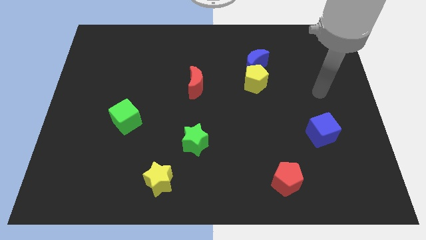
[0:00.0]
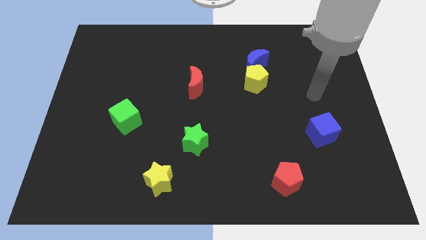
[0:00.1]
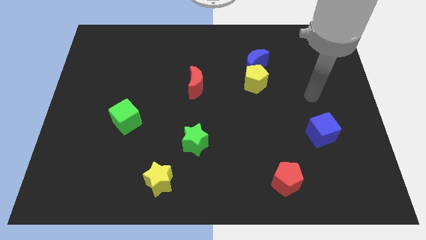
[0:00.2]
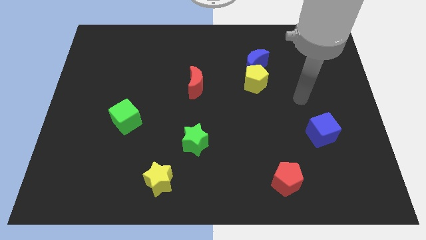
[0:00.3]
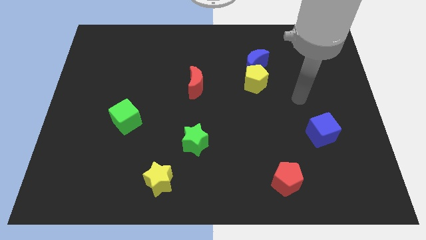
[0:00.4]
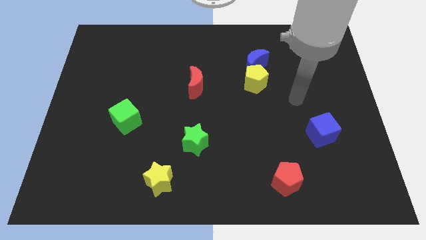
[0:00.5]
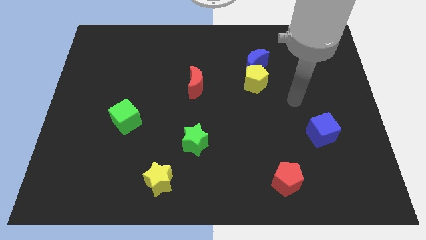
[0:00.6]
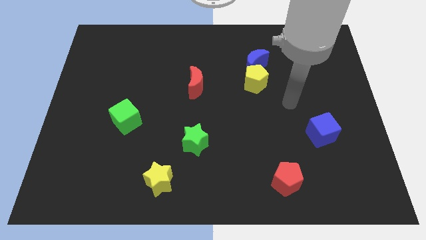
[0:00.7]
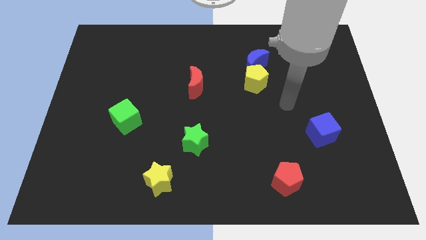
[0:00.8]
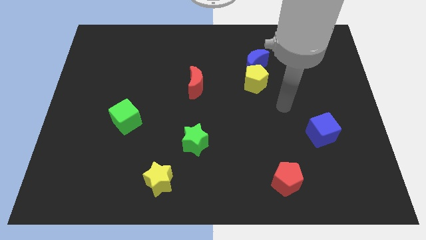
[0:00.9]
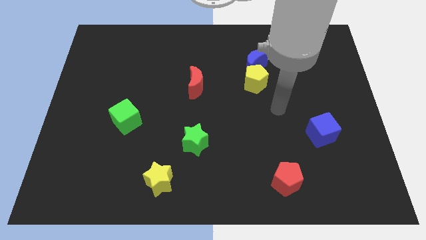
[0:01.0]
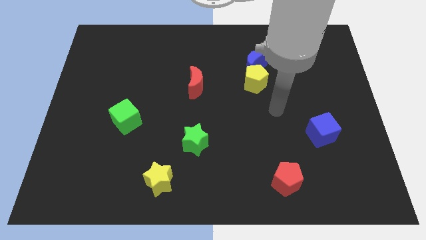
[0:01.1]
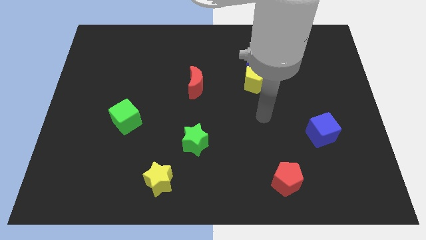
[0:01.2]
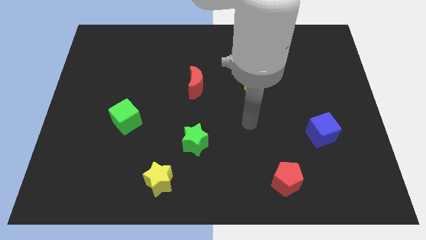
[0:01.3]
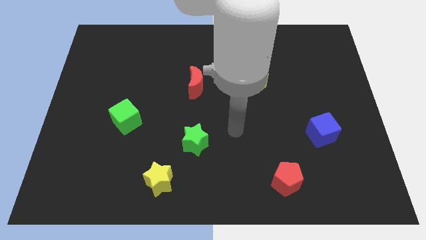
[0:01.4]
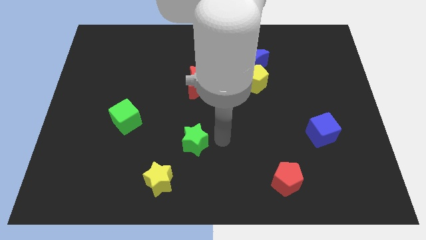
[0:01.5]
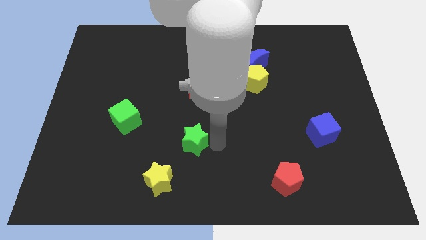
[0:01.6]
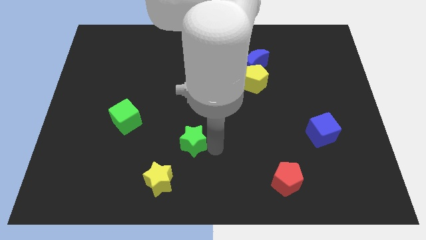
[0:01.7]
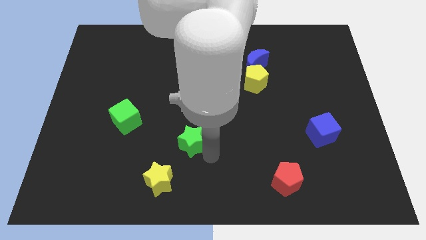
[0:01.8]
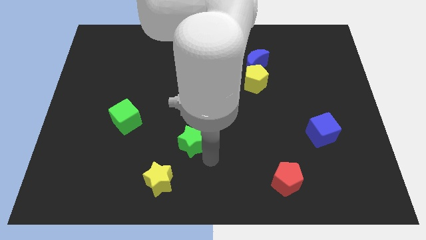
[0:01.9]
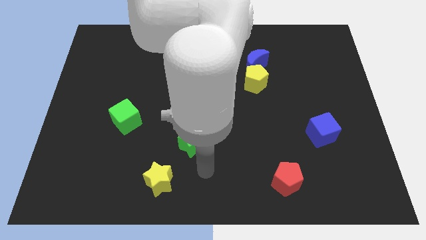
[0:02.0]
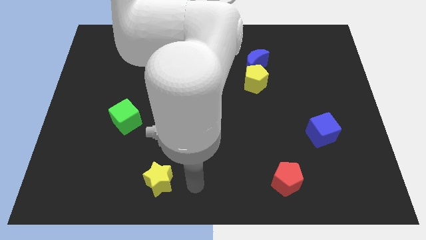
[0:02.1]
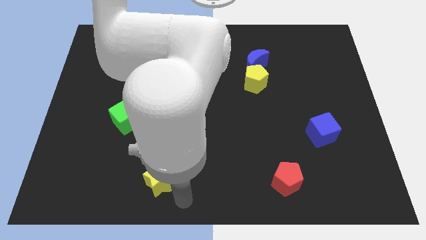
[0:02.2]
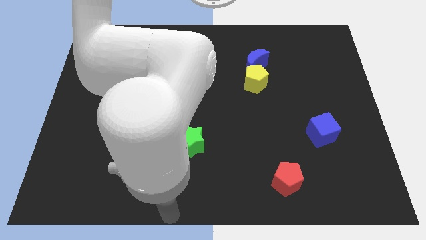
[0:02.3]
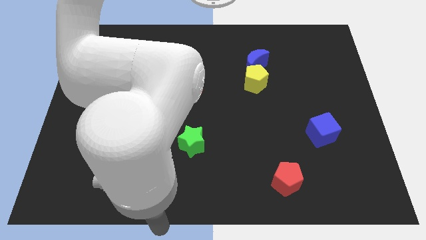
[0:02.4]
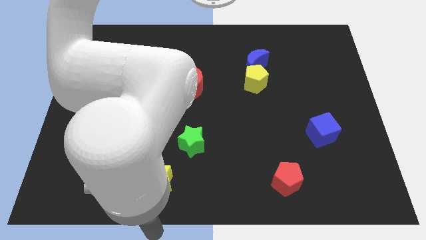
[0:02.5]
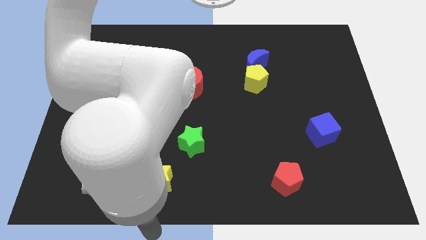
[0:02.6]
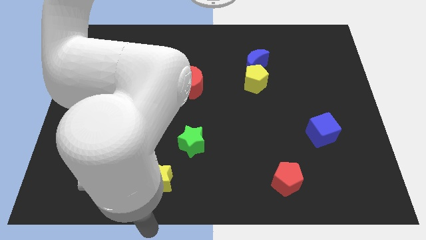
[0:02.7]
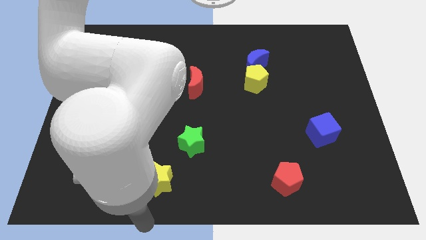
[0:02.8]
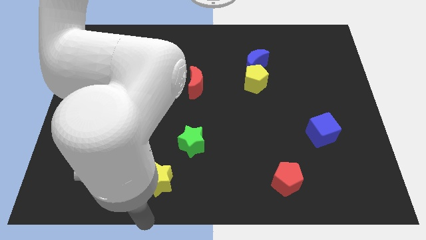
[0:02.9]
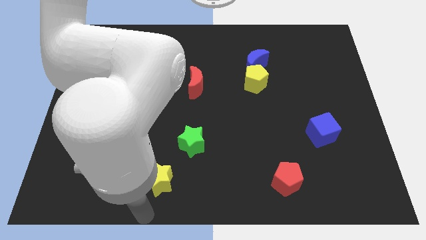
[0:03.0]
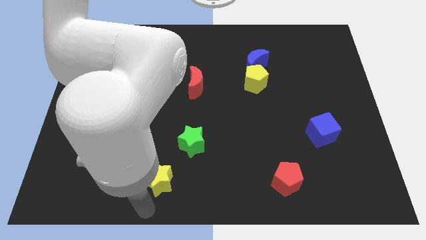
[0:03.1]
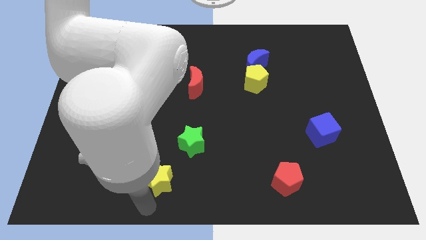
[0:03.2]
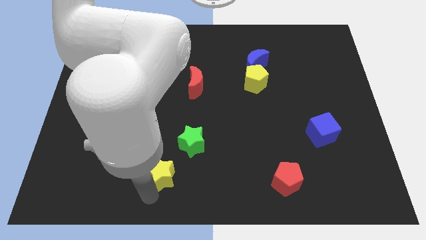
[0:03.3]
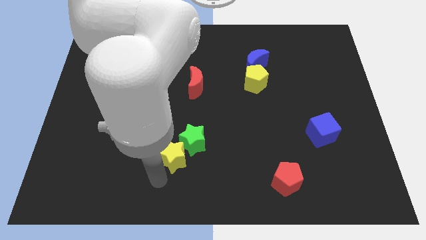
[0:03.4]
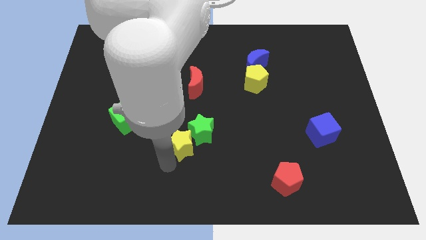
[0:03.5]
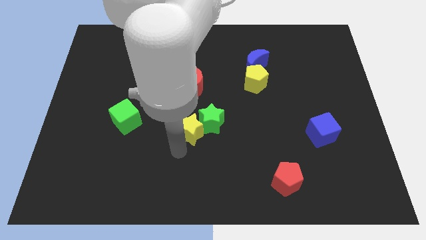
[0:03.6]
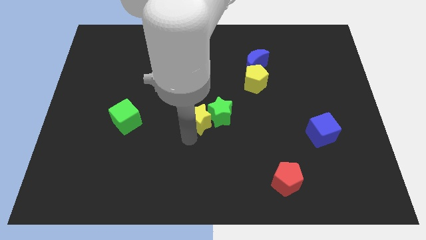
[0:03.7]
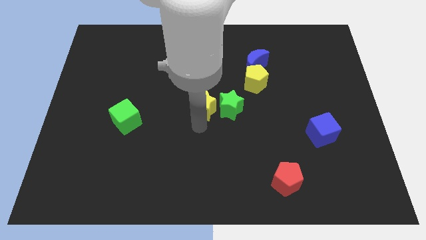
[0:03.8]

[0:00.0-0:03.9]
push the yellow star into the green star

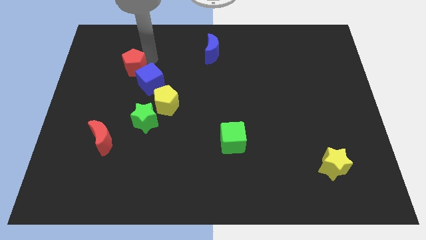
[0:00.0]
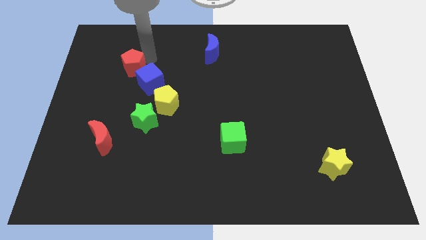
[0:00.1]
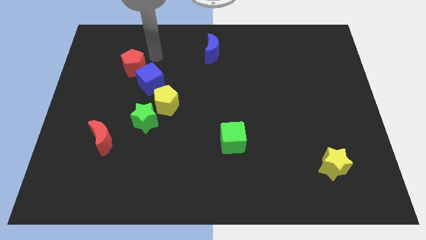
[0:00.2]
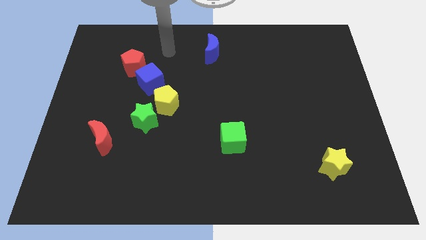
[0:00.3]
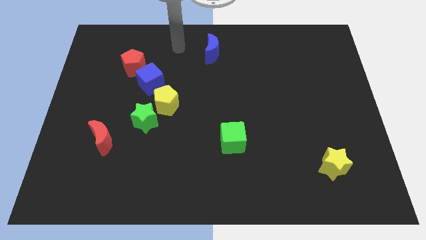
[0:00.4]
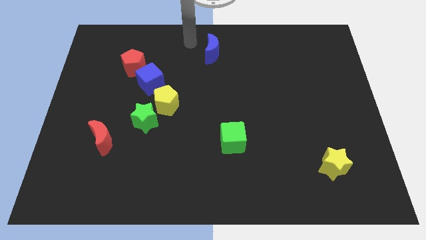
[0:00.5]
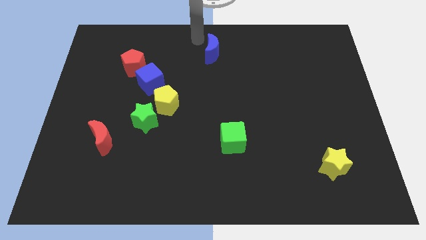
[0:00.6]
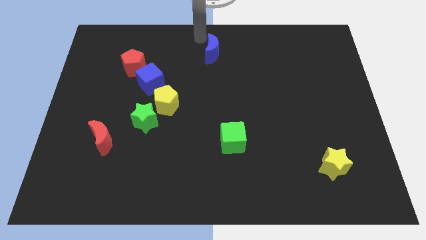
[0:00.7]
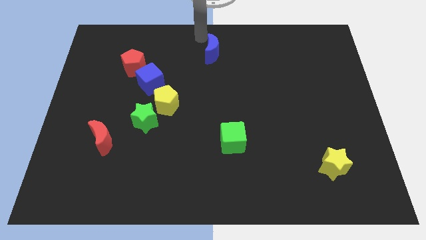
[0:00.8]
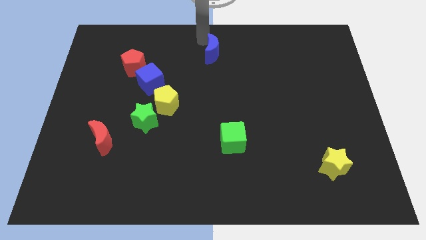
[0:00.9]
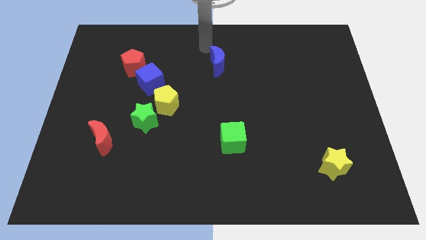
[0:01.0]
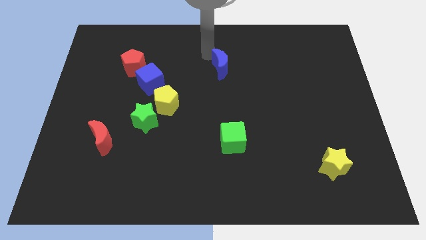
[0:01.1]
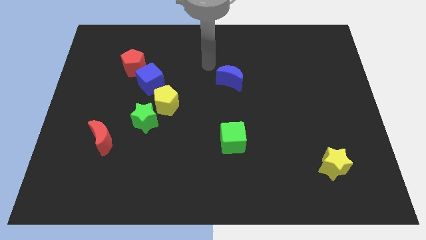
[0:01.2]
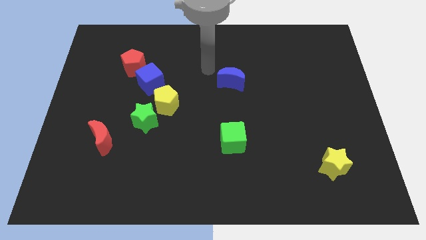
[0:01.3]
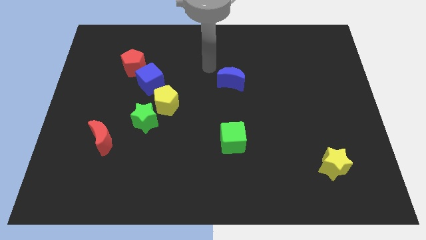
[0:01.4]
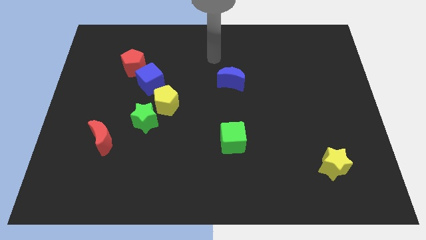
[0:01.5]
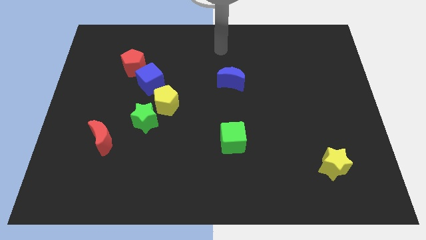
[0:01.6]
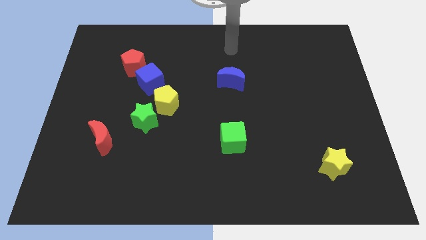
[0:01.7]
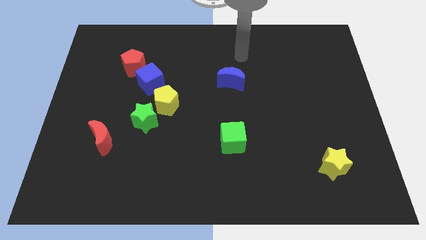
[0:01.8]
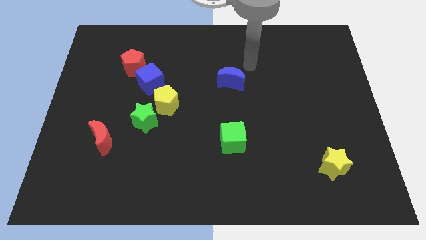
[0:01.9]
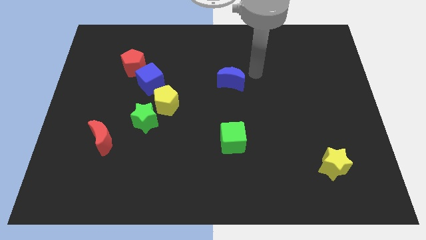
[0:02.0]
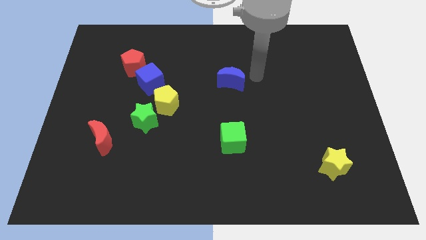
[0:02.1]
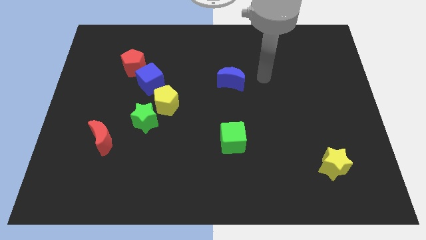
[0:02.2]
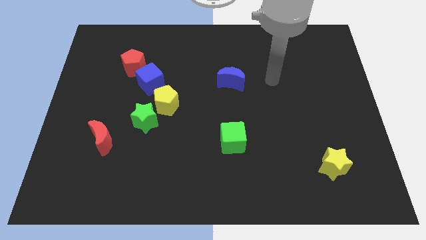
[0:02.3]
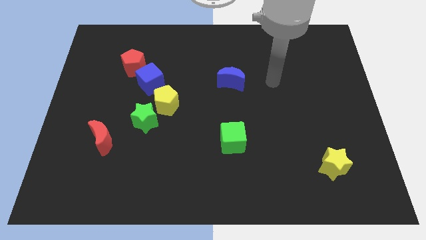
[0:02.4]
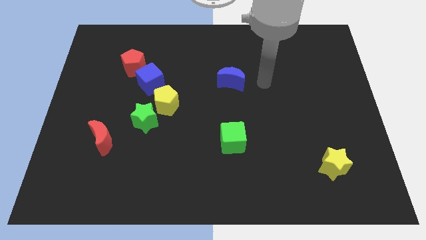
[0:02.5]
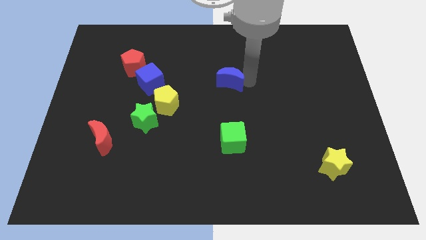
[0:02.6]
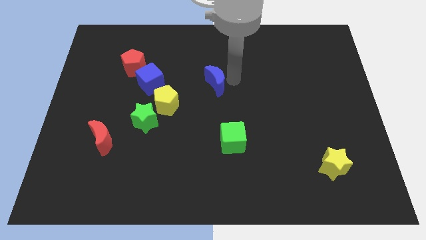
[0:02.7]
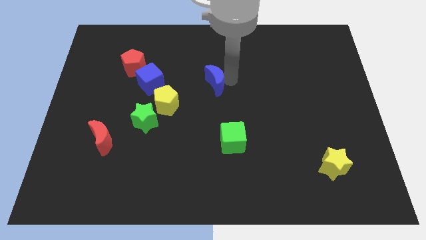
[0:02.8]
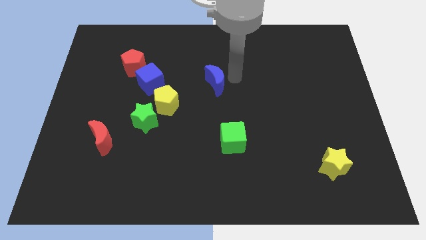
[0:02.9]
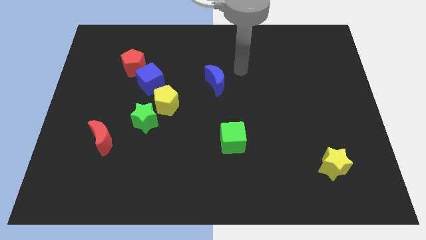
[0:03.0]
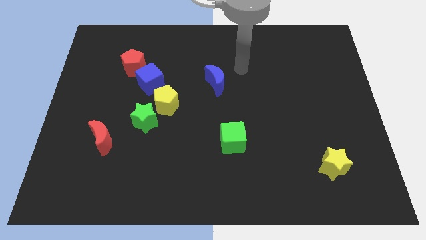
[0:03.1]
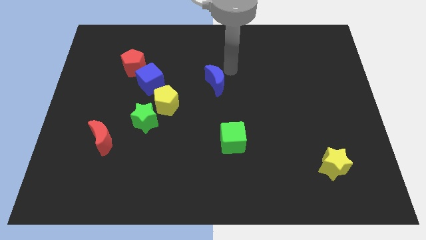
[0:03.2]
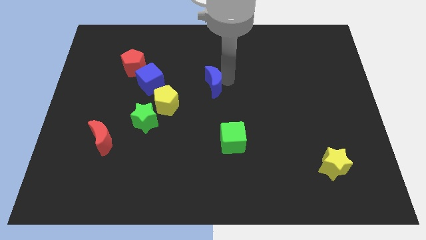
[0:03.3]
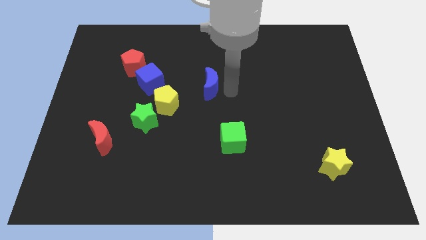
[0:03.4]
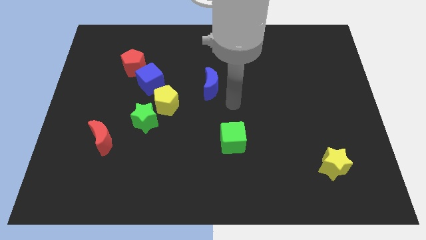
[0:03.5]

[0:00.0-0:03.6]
push the blue crescent around

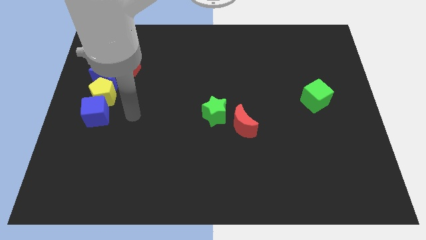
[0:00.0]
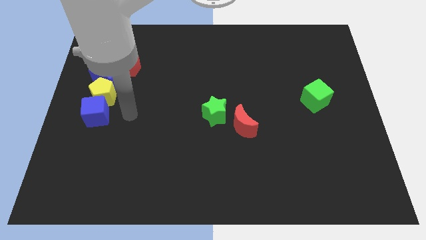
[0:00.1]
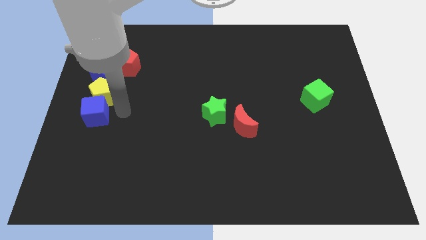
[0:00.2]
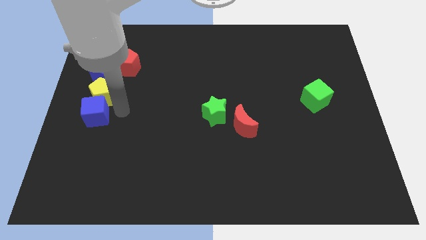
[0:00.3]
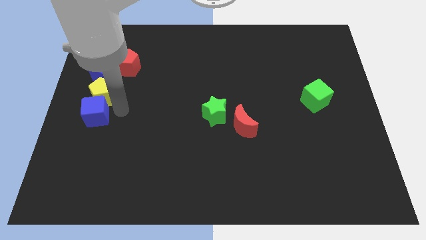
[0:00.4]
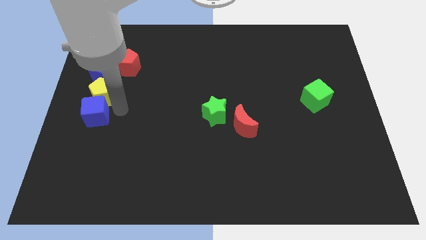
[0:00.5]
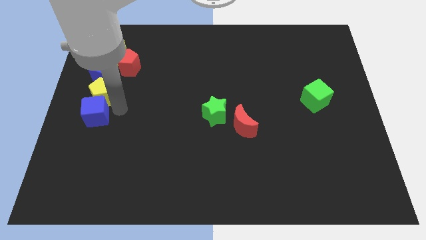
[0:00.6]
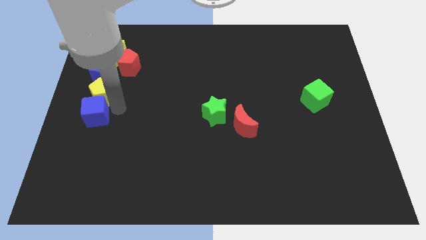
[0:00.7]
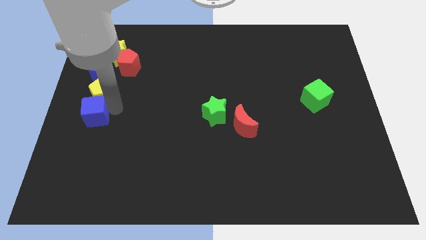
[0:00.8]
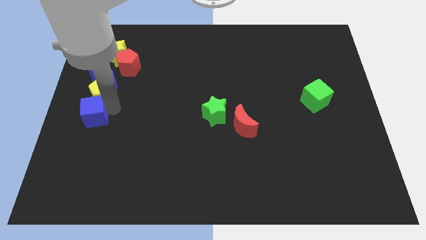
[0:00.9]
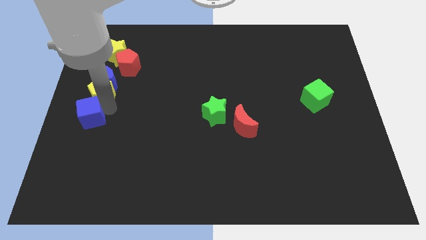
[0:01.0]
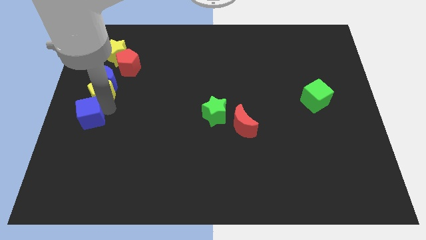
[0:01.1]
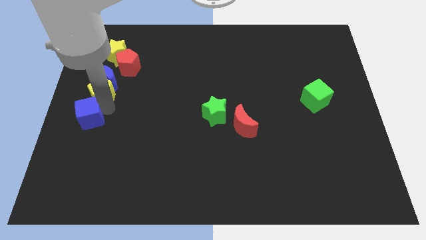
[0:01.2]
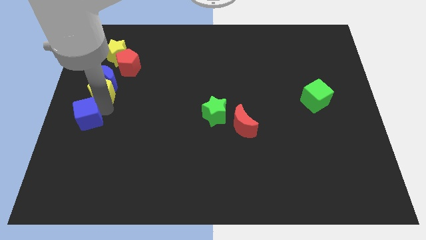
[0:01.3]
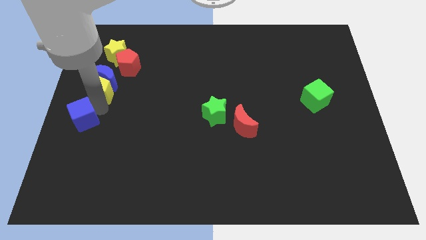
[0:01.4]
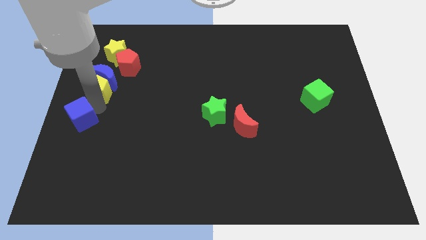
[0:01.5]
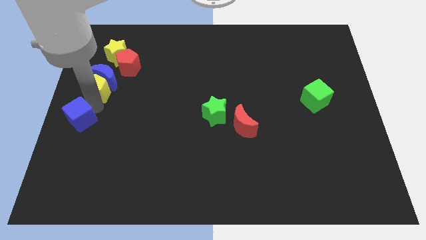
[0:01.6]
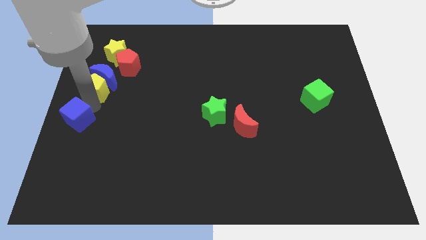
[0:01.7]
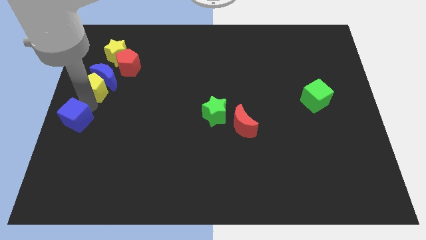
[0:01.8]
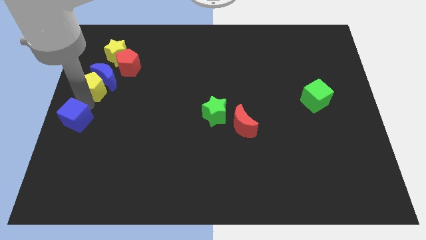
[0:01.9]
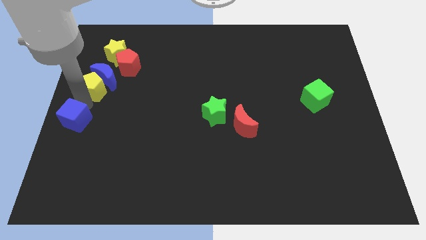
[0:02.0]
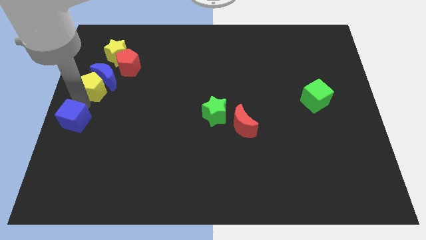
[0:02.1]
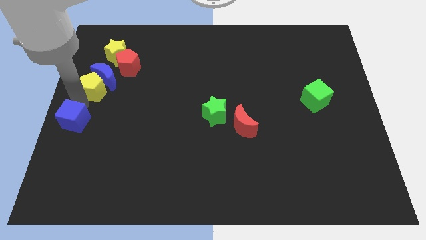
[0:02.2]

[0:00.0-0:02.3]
place your hand in between the blue cube and yellow pentagon
